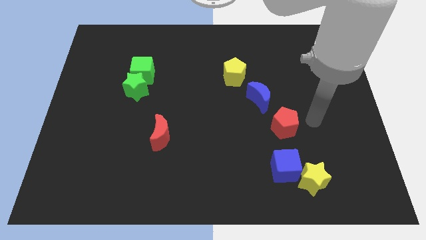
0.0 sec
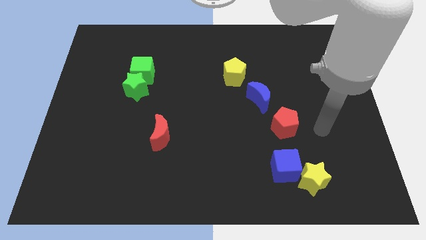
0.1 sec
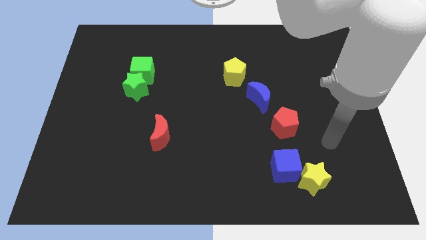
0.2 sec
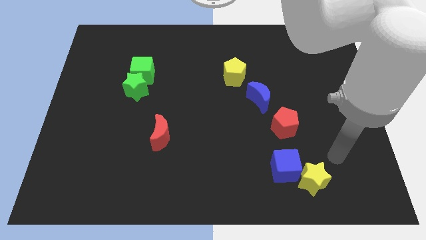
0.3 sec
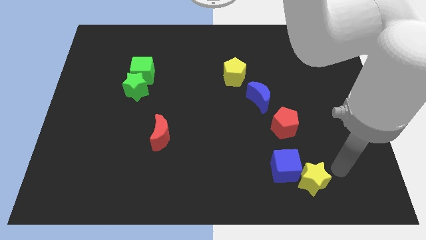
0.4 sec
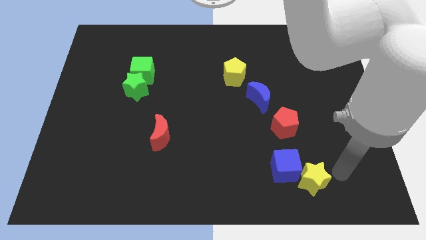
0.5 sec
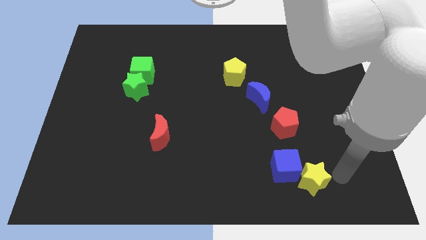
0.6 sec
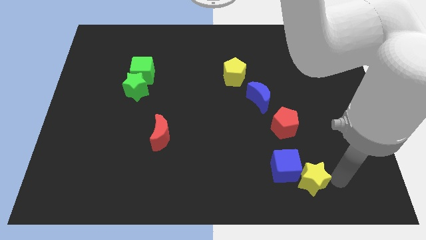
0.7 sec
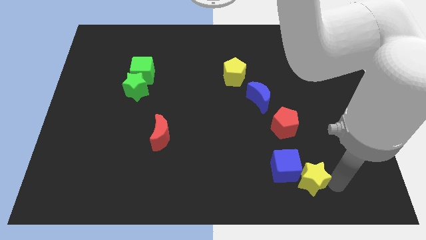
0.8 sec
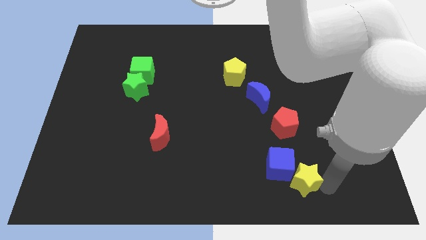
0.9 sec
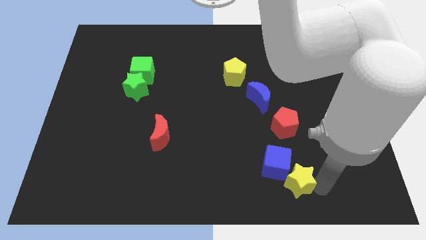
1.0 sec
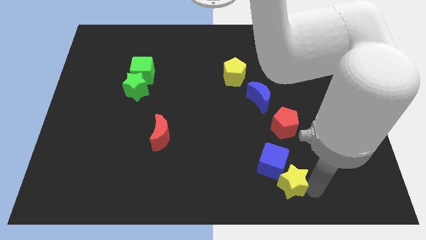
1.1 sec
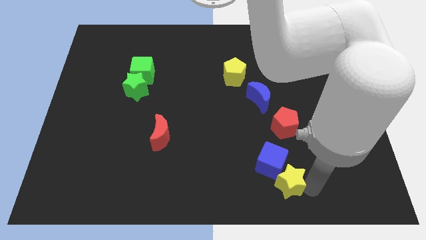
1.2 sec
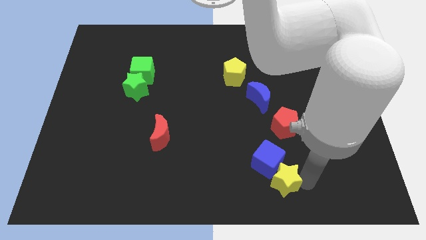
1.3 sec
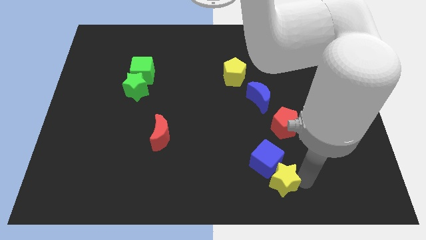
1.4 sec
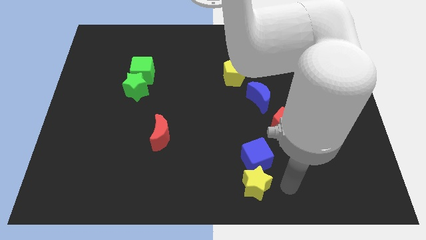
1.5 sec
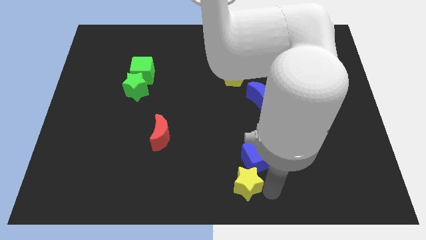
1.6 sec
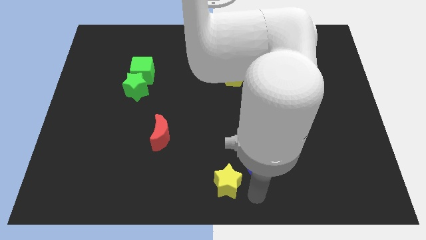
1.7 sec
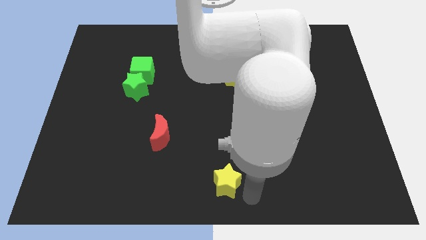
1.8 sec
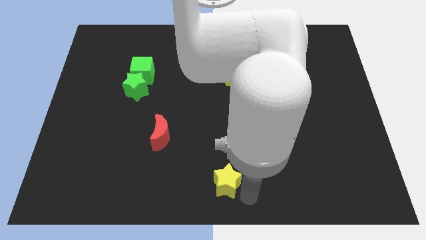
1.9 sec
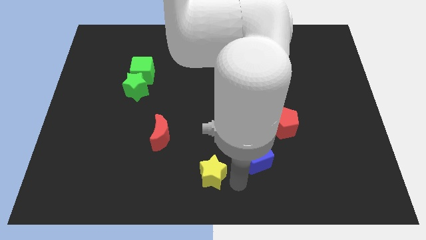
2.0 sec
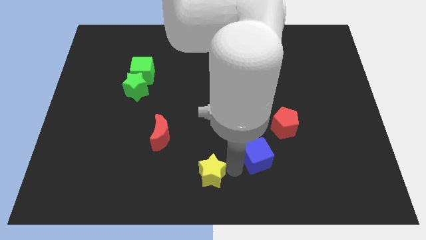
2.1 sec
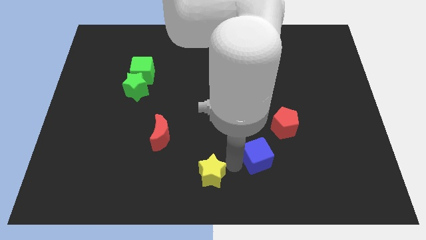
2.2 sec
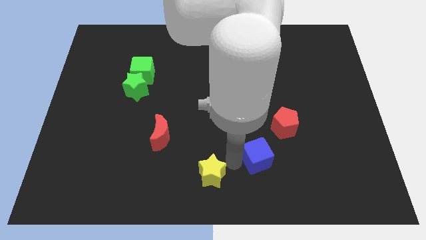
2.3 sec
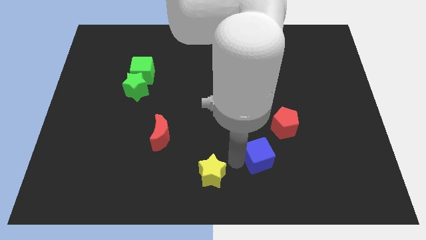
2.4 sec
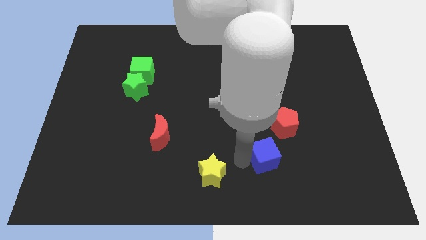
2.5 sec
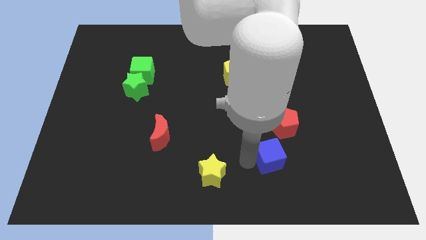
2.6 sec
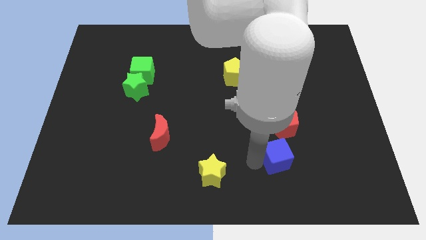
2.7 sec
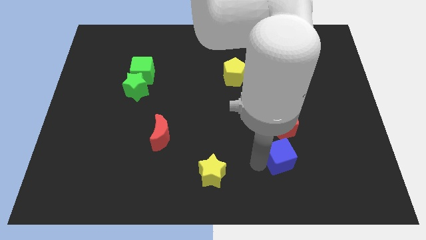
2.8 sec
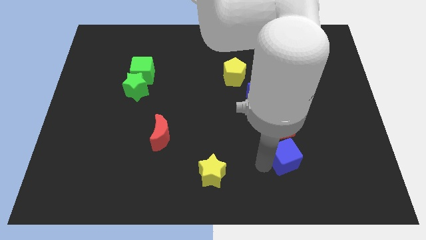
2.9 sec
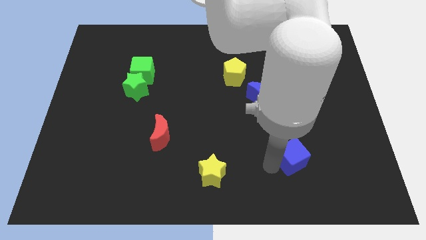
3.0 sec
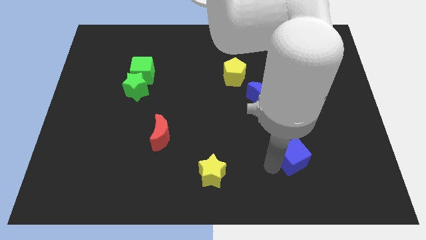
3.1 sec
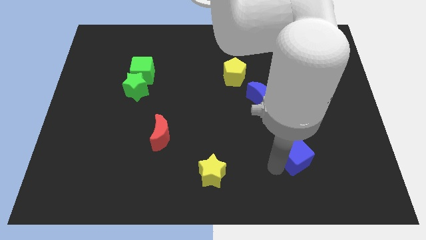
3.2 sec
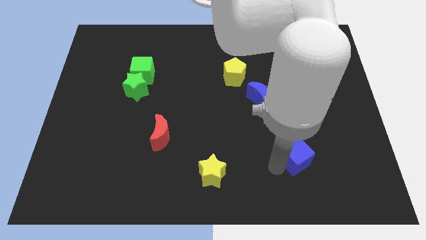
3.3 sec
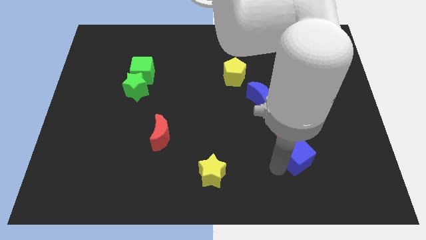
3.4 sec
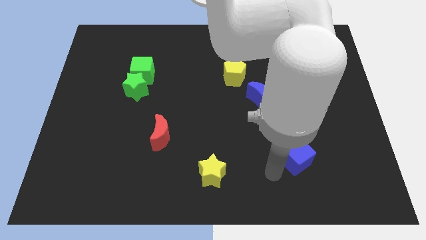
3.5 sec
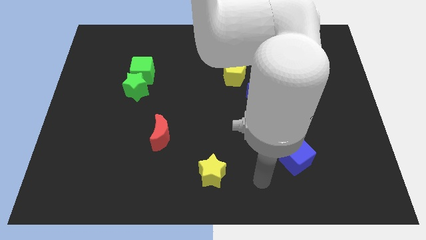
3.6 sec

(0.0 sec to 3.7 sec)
slightly move the blue cube to the bottom left corner

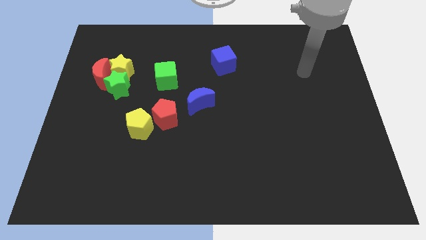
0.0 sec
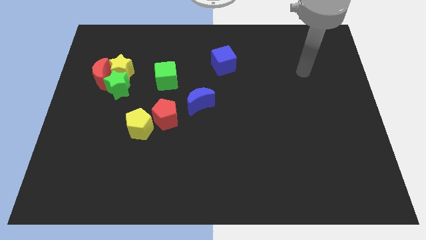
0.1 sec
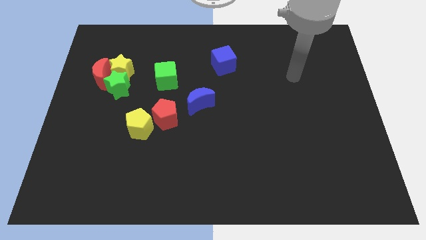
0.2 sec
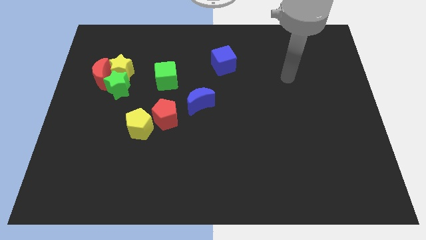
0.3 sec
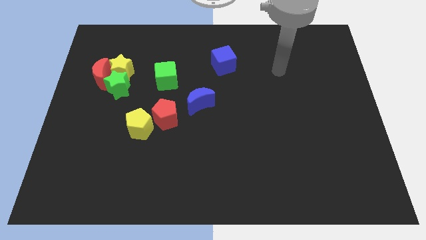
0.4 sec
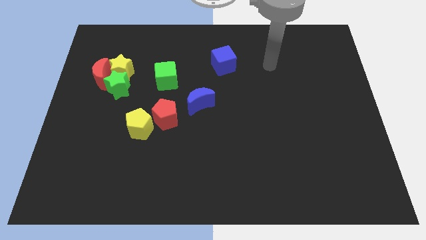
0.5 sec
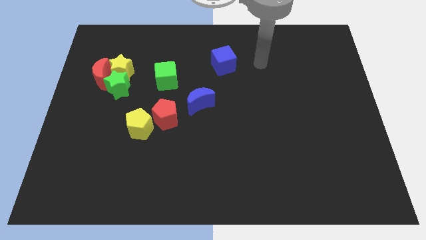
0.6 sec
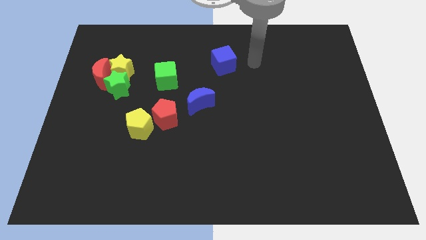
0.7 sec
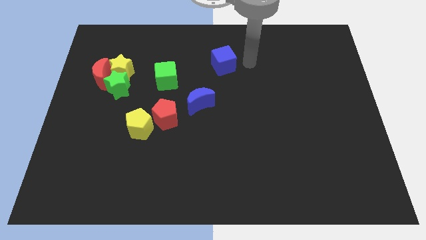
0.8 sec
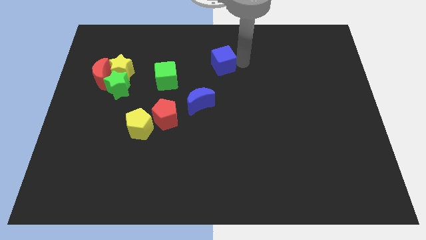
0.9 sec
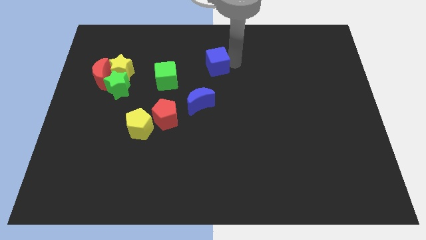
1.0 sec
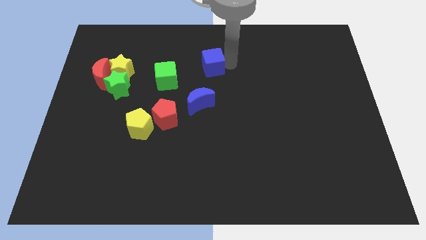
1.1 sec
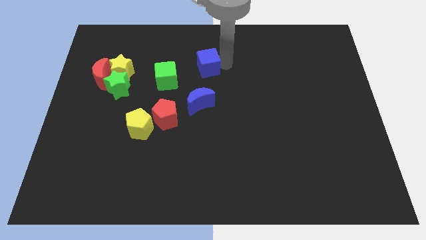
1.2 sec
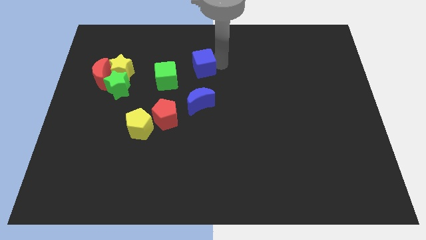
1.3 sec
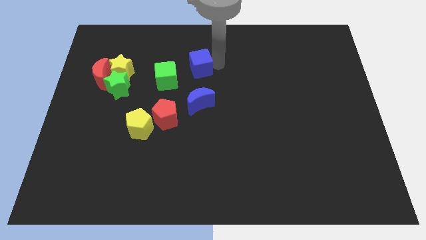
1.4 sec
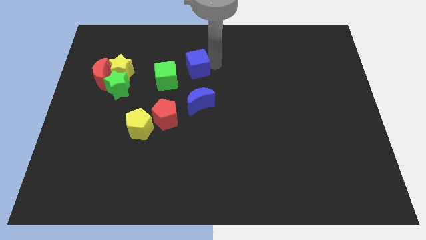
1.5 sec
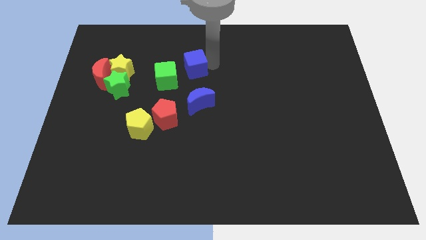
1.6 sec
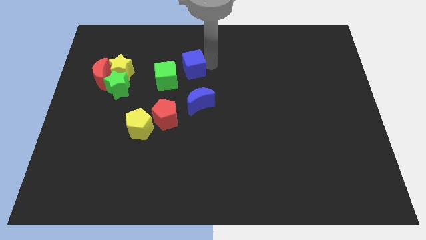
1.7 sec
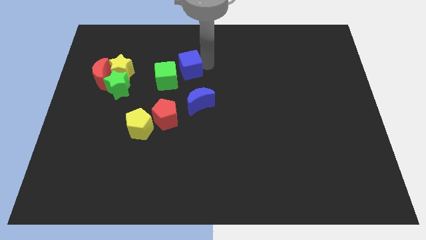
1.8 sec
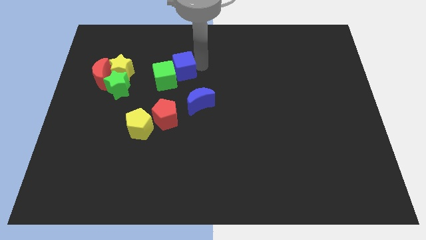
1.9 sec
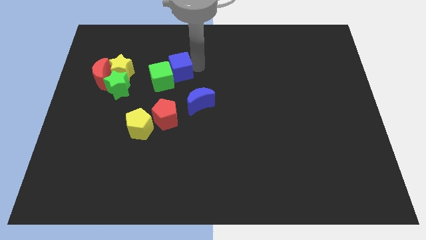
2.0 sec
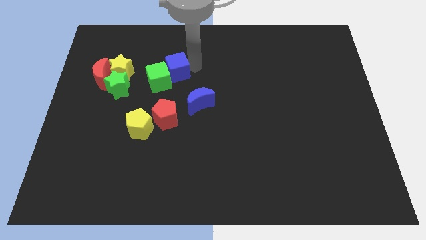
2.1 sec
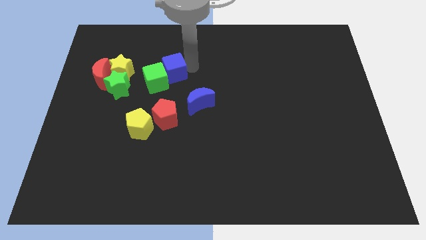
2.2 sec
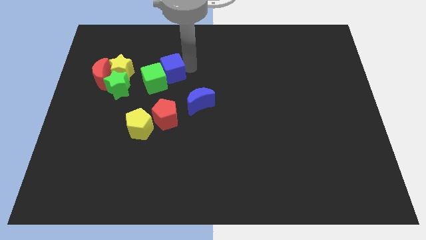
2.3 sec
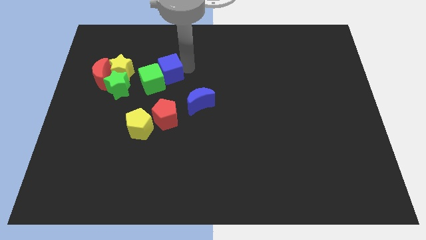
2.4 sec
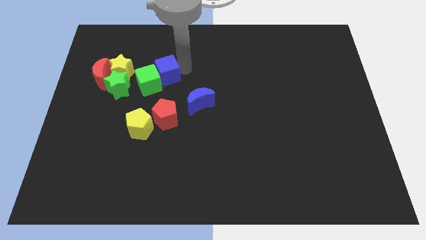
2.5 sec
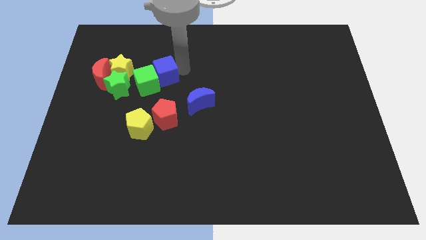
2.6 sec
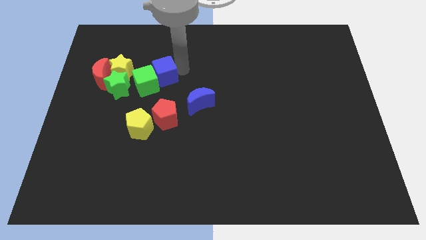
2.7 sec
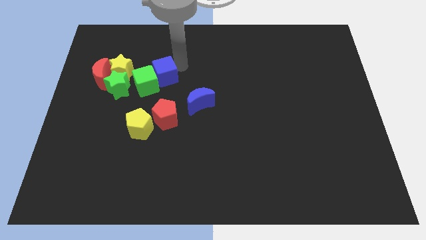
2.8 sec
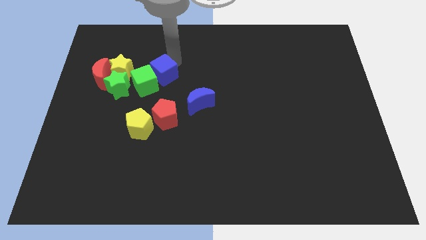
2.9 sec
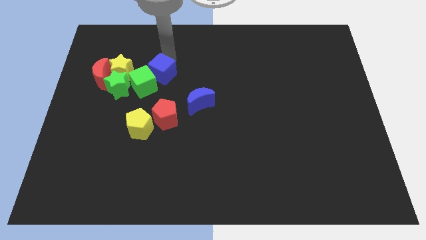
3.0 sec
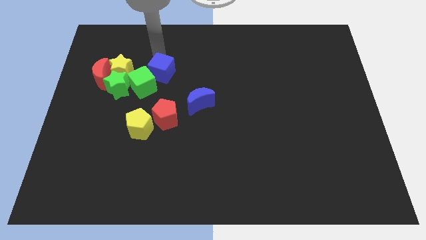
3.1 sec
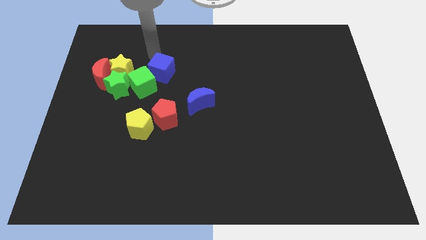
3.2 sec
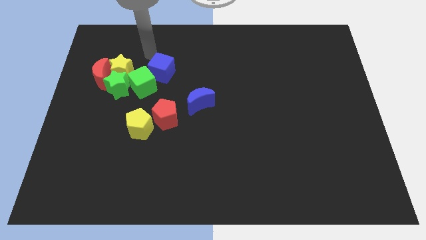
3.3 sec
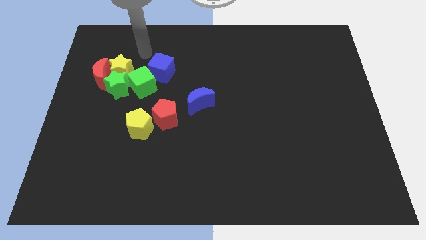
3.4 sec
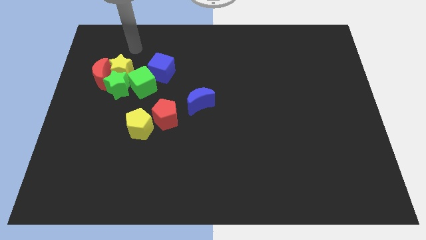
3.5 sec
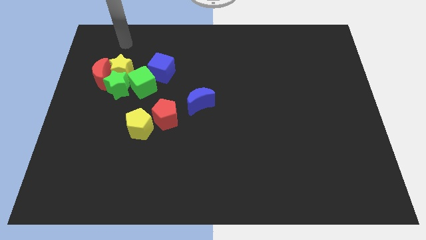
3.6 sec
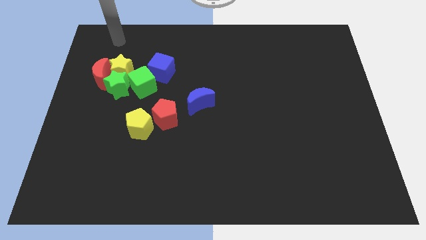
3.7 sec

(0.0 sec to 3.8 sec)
push green cube with the blue cube

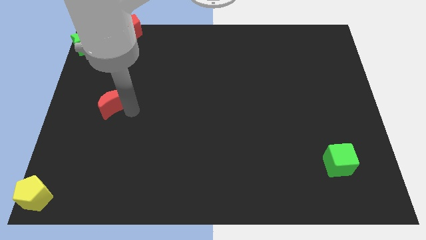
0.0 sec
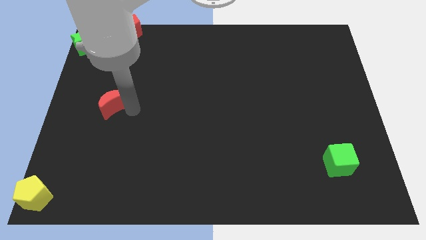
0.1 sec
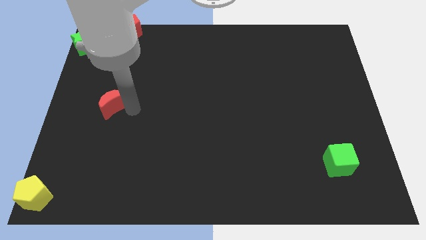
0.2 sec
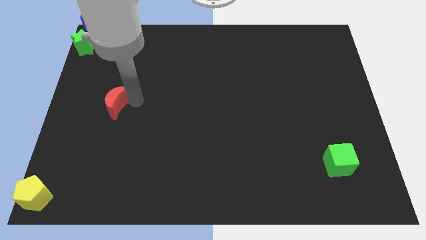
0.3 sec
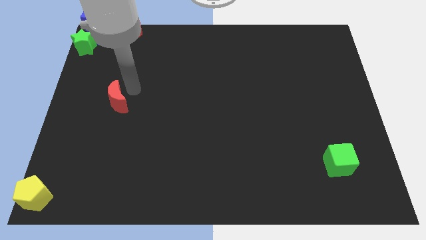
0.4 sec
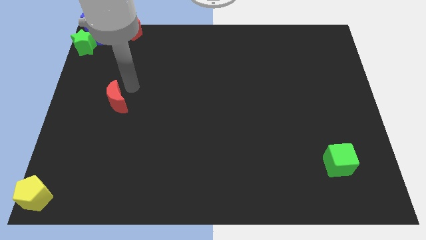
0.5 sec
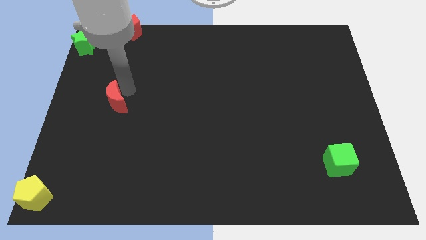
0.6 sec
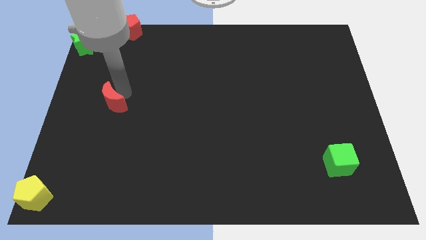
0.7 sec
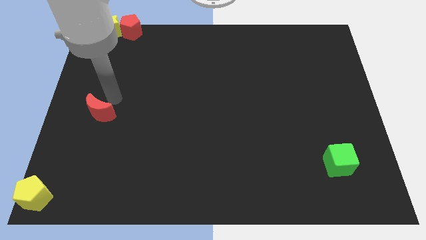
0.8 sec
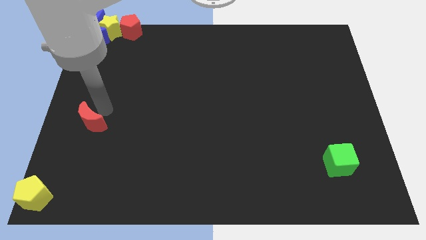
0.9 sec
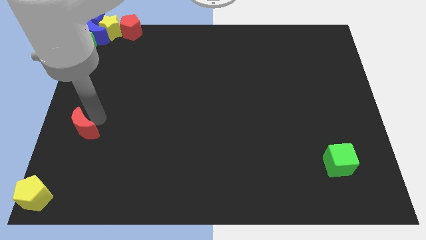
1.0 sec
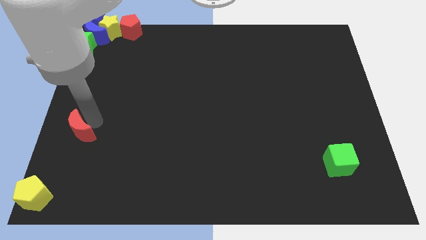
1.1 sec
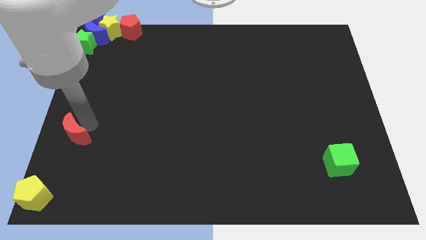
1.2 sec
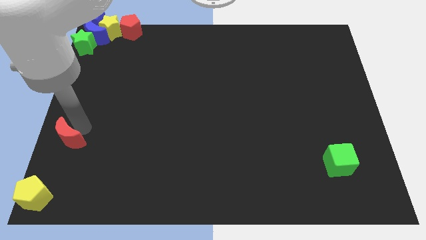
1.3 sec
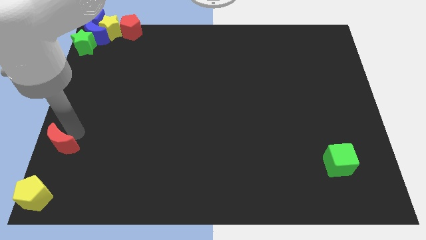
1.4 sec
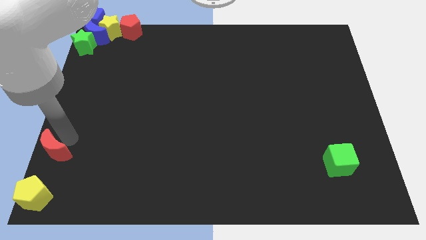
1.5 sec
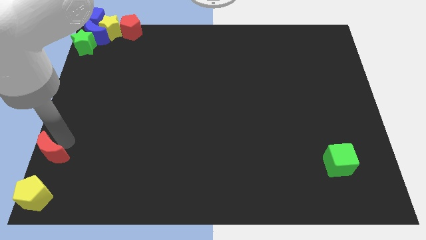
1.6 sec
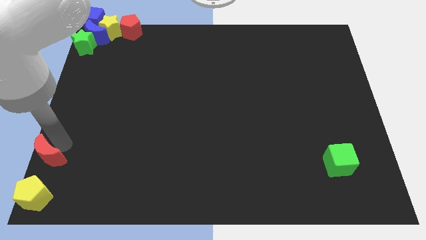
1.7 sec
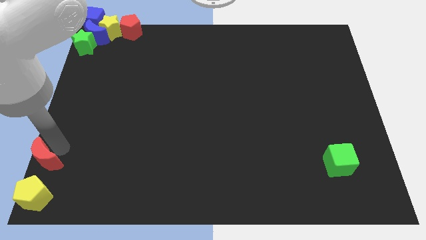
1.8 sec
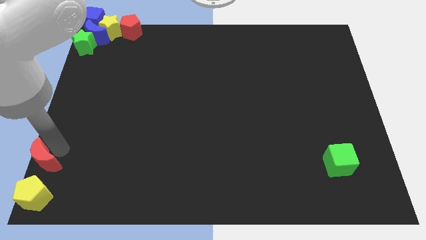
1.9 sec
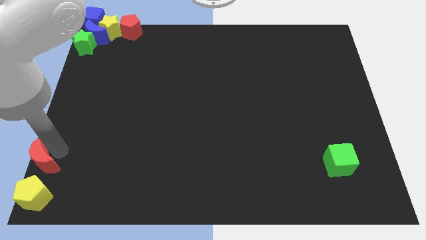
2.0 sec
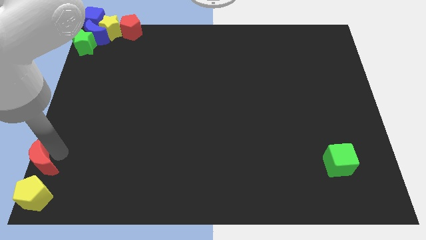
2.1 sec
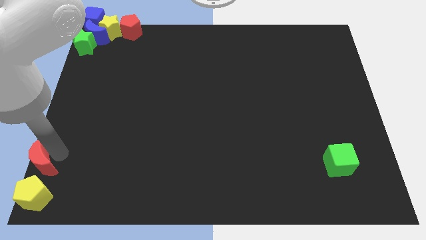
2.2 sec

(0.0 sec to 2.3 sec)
push the red crescent to the top of the yellow pentagon
